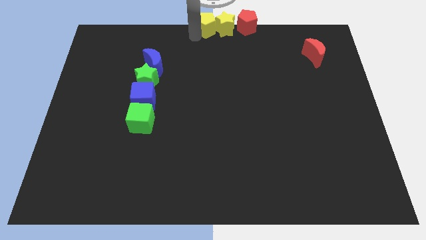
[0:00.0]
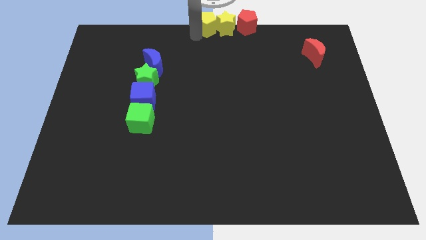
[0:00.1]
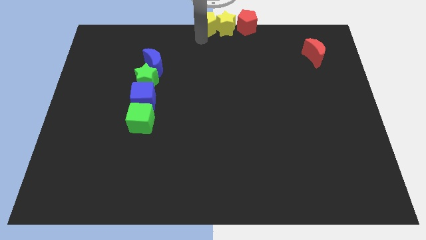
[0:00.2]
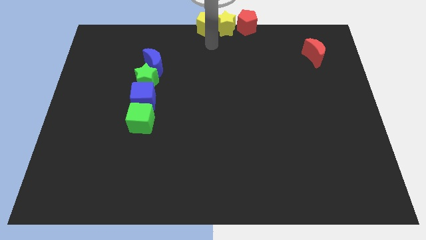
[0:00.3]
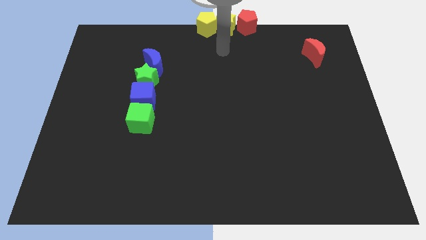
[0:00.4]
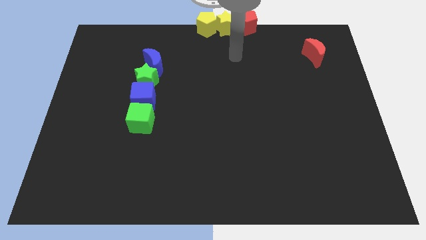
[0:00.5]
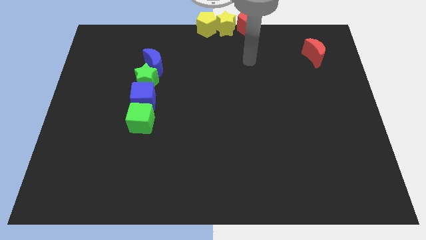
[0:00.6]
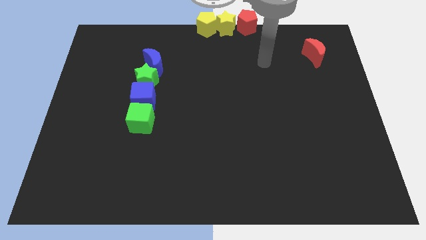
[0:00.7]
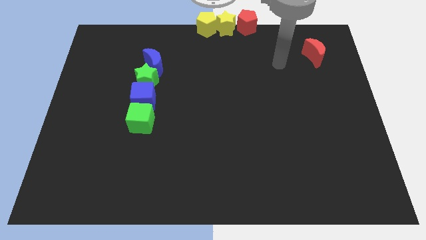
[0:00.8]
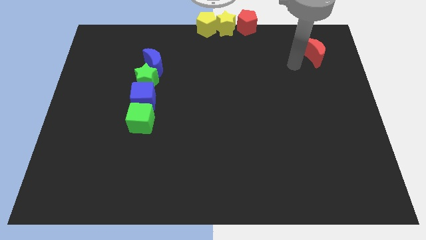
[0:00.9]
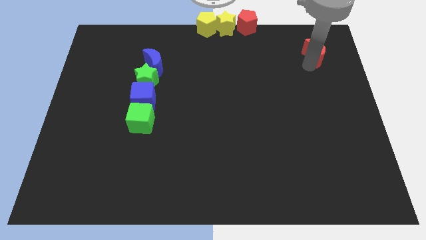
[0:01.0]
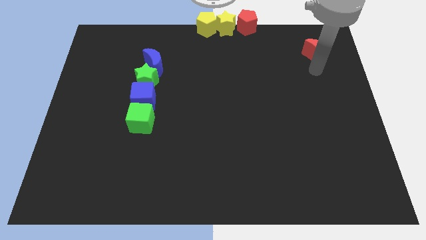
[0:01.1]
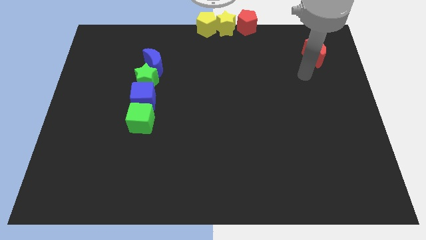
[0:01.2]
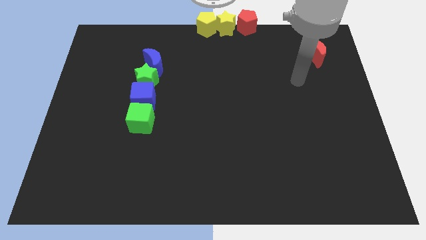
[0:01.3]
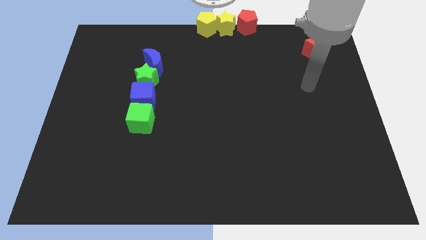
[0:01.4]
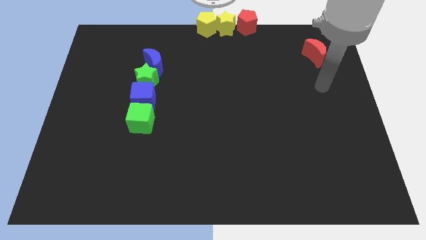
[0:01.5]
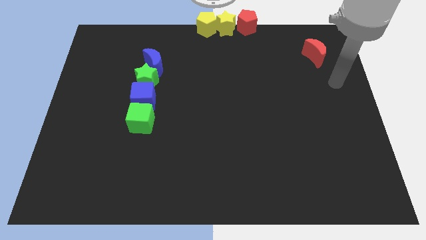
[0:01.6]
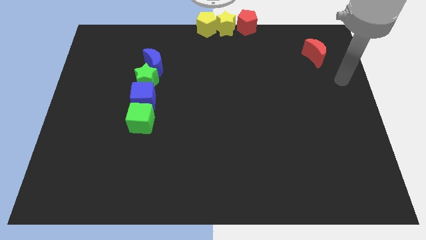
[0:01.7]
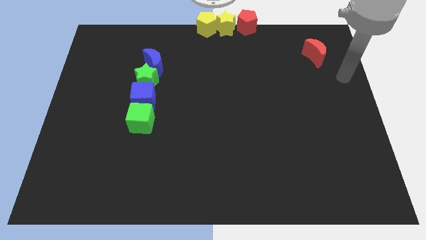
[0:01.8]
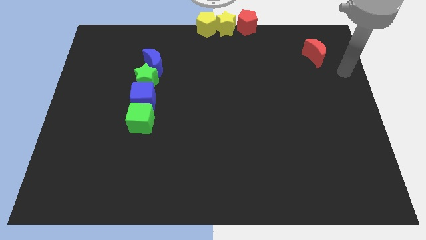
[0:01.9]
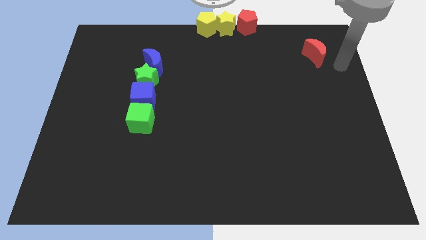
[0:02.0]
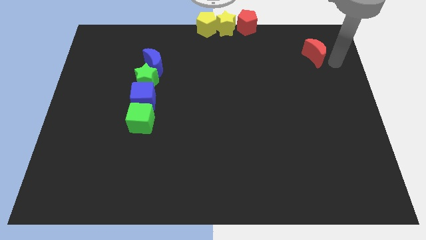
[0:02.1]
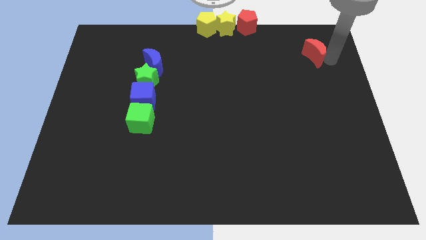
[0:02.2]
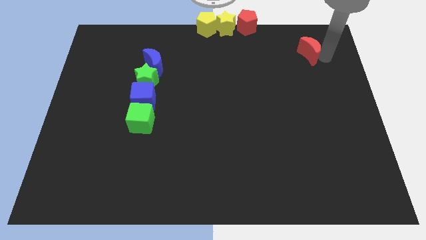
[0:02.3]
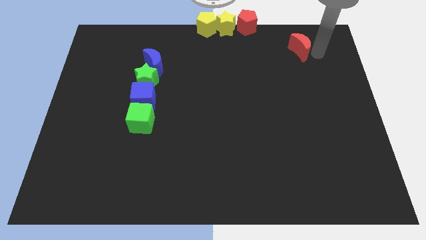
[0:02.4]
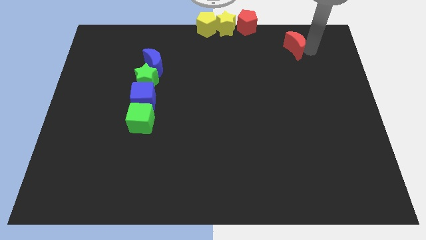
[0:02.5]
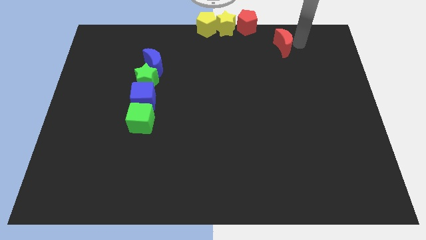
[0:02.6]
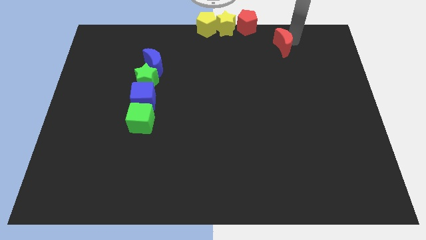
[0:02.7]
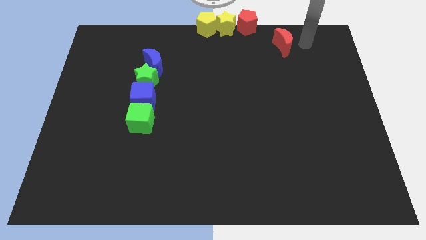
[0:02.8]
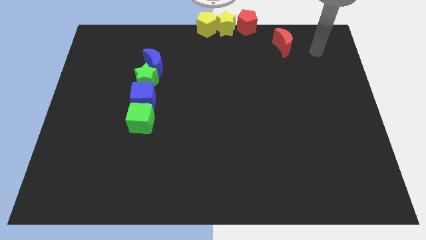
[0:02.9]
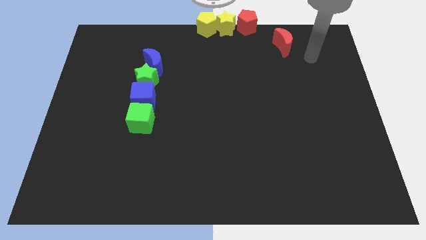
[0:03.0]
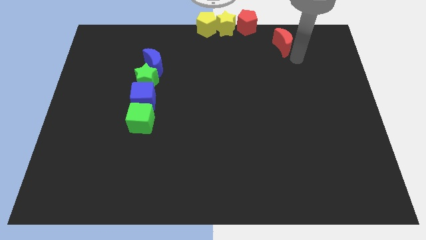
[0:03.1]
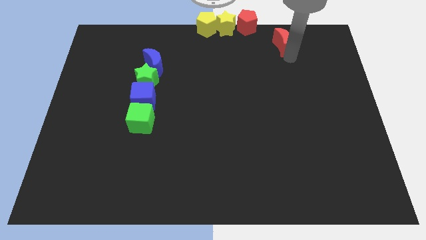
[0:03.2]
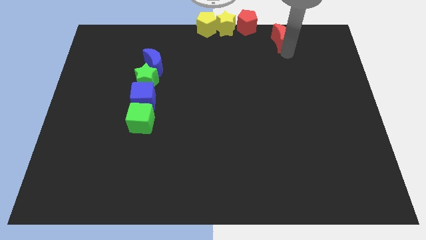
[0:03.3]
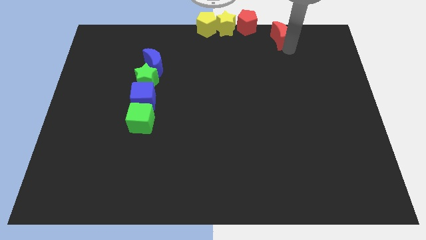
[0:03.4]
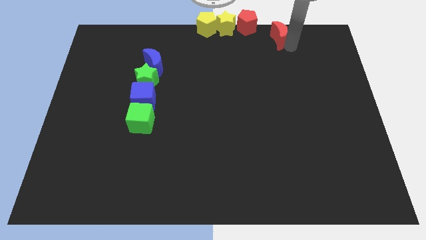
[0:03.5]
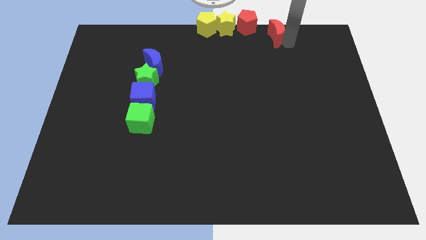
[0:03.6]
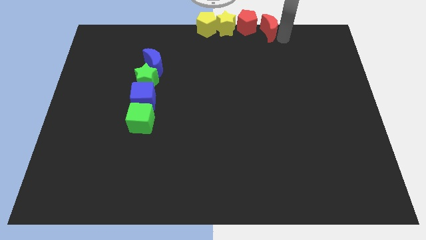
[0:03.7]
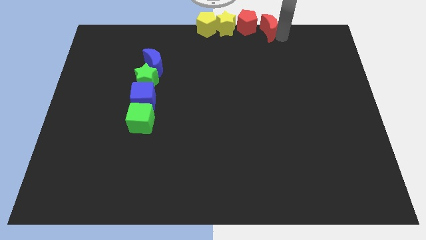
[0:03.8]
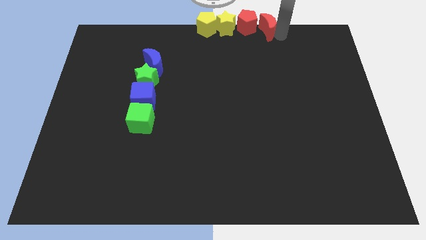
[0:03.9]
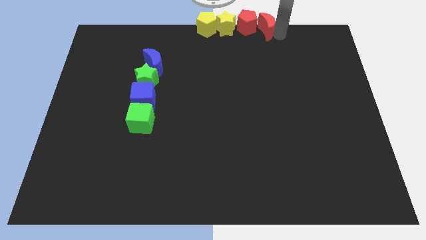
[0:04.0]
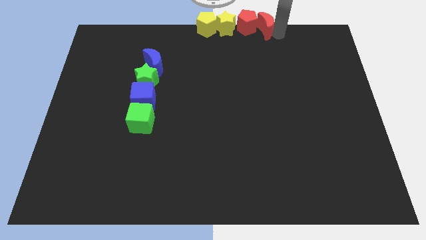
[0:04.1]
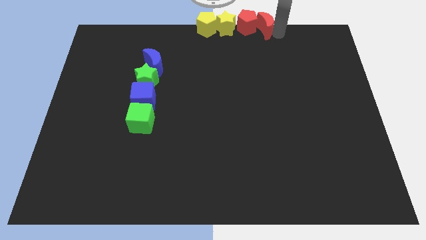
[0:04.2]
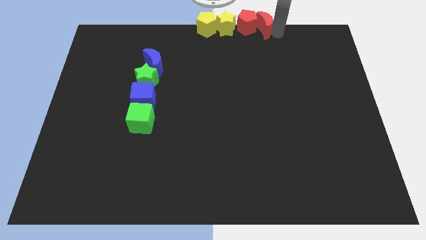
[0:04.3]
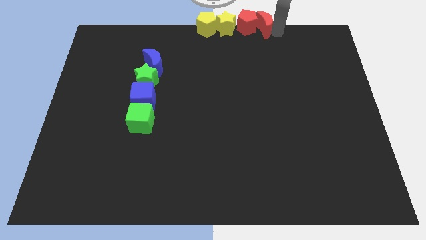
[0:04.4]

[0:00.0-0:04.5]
push the red crescent into the right side of the red pentagon

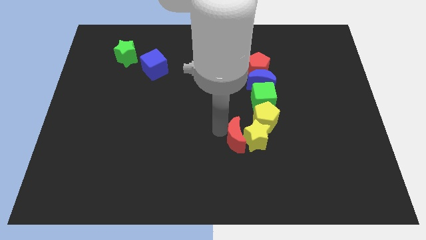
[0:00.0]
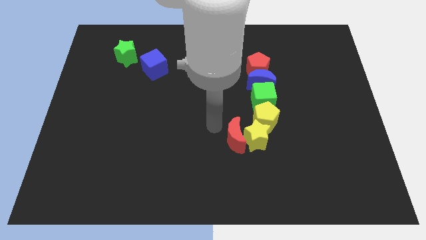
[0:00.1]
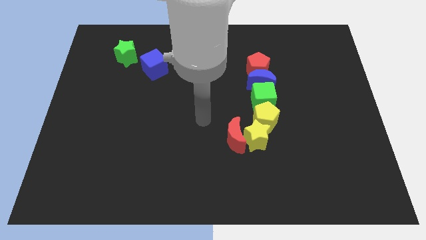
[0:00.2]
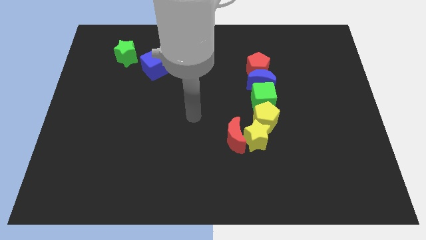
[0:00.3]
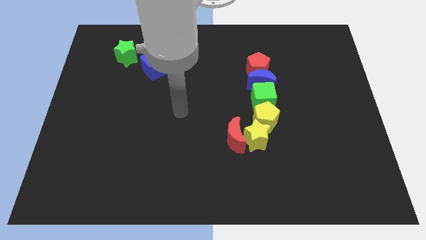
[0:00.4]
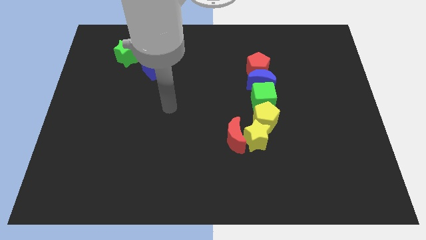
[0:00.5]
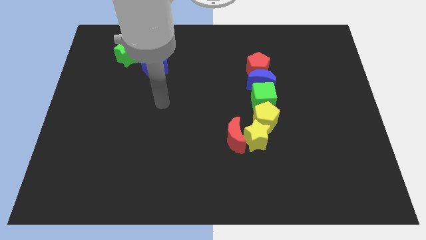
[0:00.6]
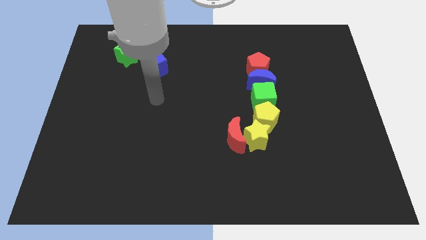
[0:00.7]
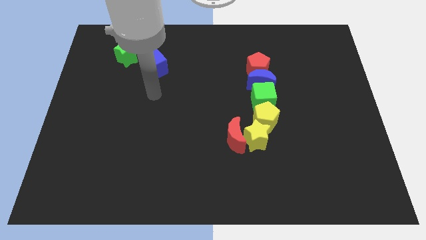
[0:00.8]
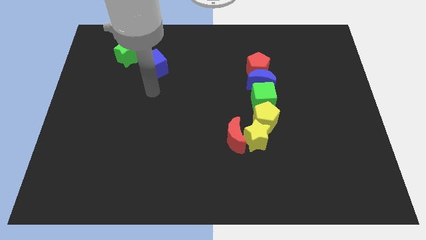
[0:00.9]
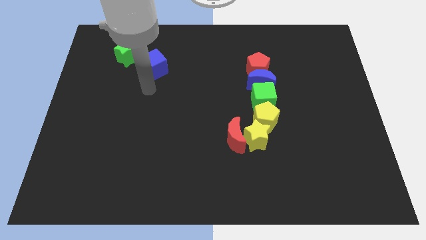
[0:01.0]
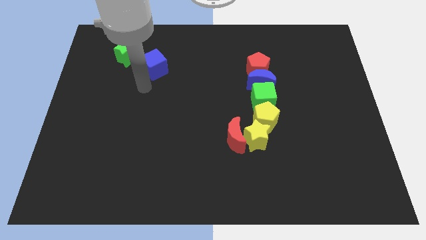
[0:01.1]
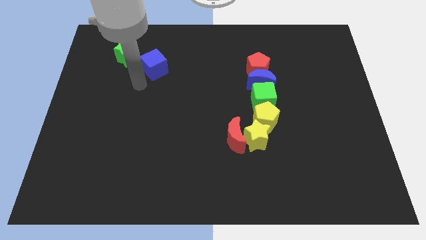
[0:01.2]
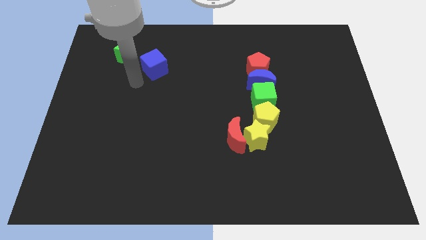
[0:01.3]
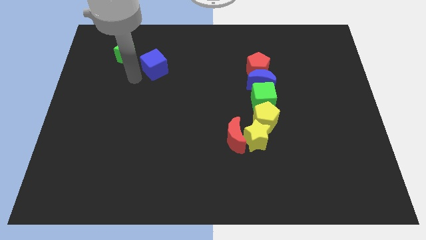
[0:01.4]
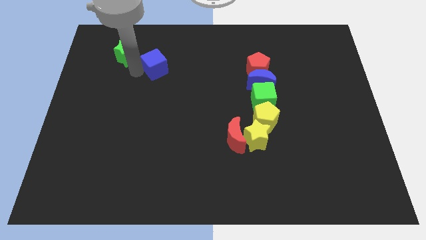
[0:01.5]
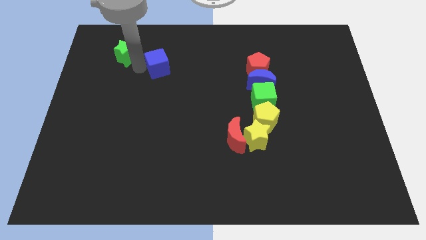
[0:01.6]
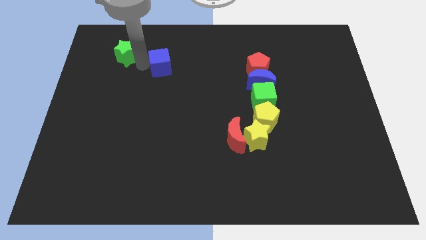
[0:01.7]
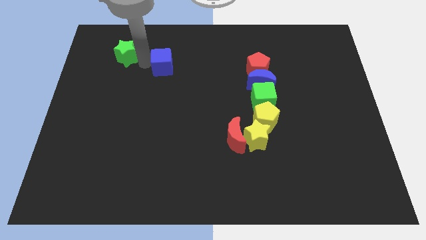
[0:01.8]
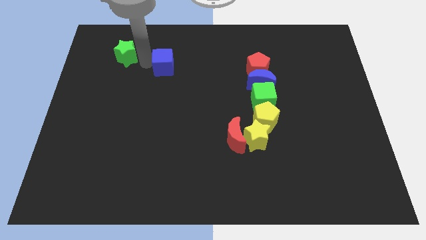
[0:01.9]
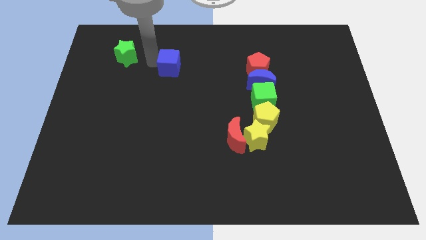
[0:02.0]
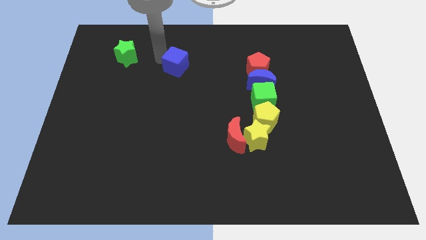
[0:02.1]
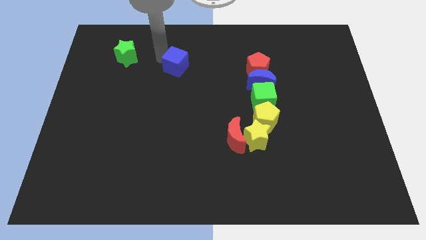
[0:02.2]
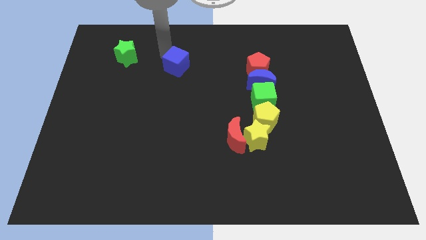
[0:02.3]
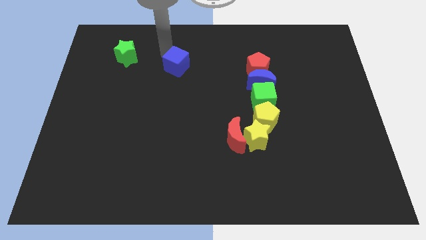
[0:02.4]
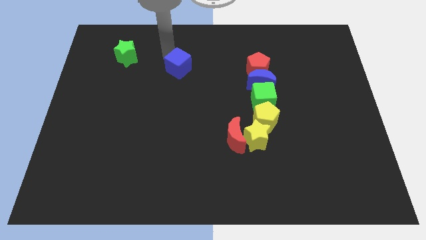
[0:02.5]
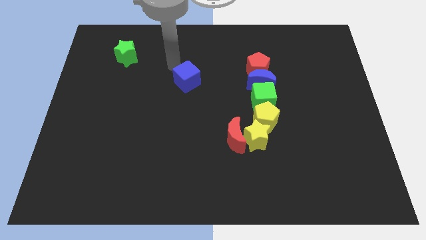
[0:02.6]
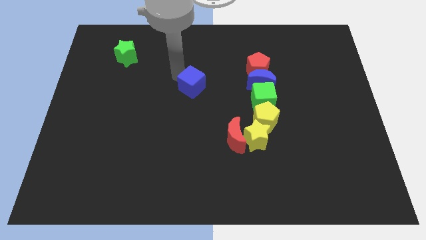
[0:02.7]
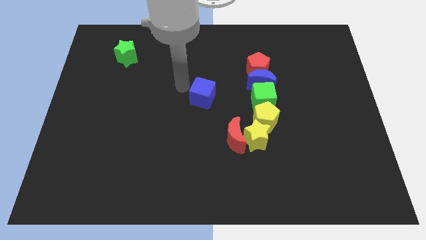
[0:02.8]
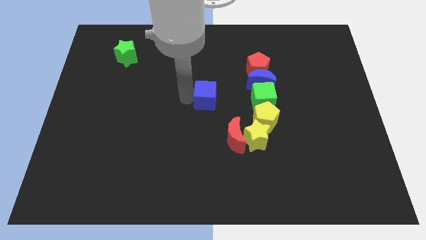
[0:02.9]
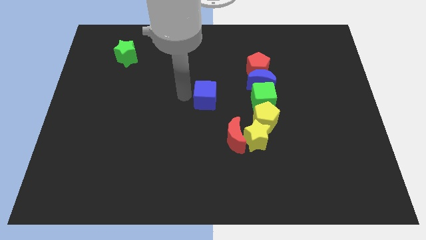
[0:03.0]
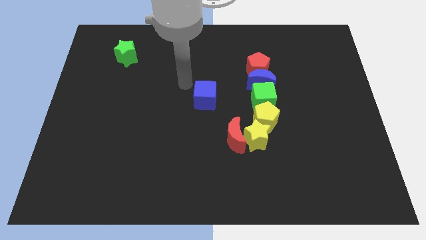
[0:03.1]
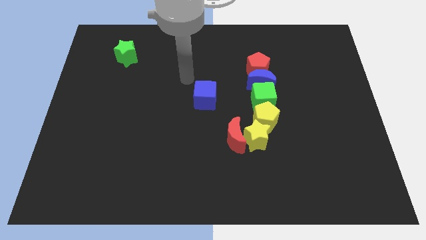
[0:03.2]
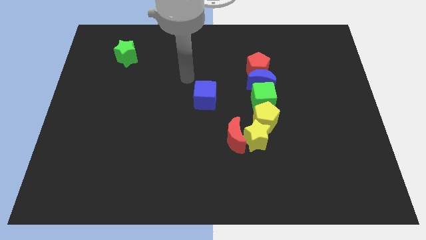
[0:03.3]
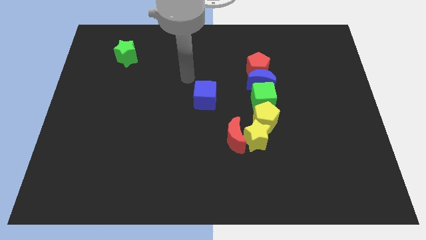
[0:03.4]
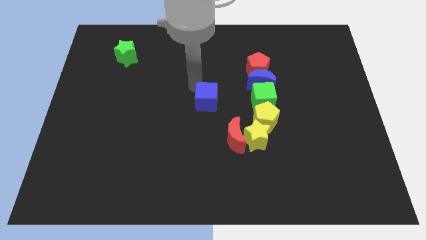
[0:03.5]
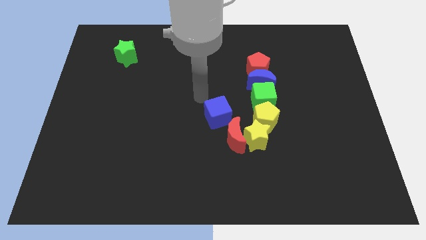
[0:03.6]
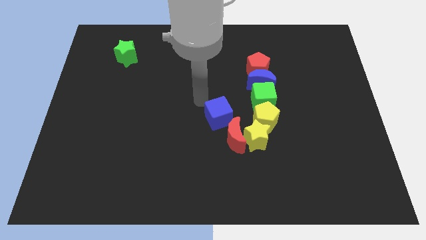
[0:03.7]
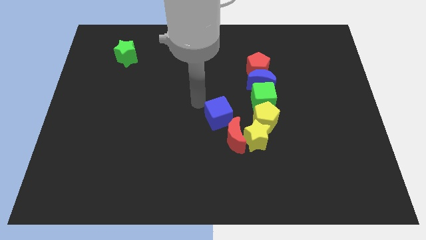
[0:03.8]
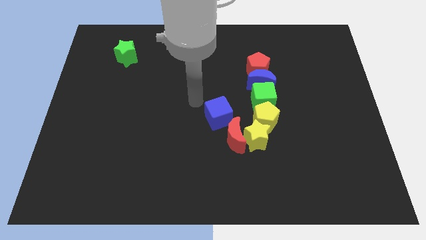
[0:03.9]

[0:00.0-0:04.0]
move the blue cube towards the top side of the red moon

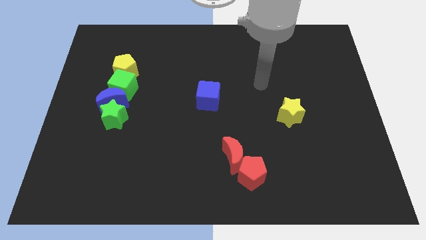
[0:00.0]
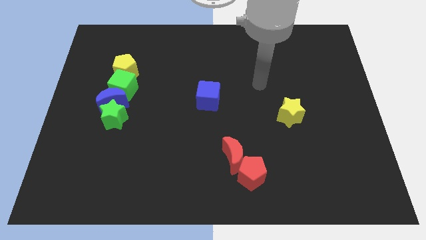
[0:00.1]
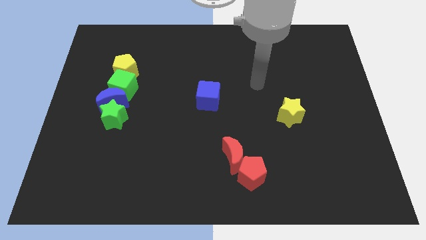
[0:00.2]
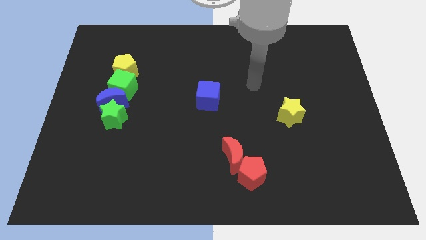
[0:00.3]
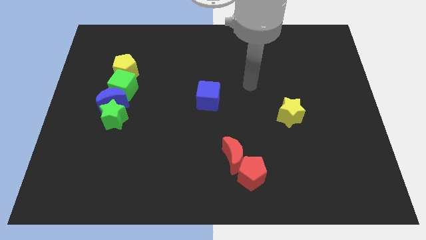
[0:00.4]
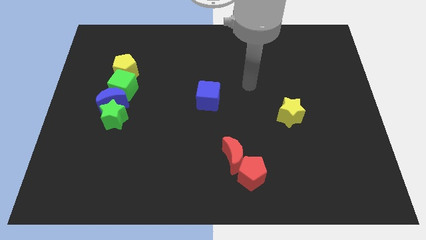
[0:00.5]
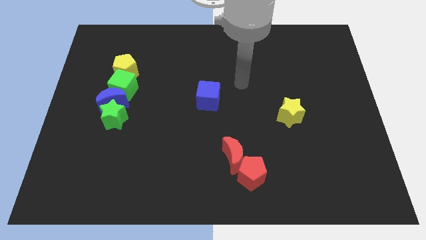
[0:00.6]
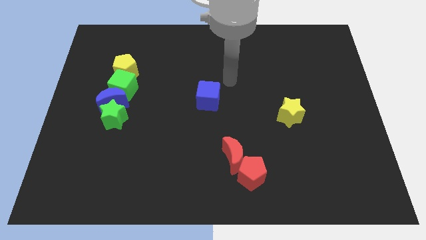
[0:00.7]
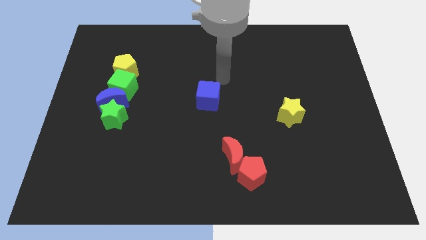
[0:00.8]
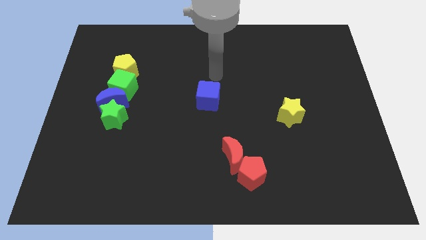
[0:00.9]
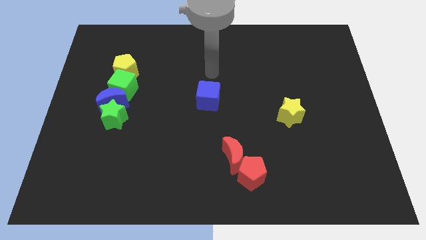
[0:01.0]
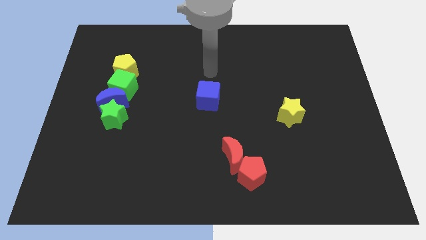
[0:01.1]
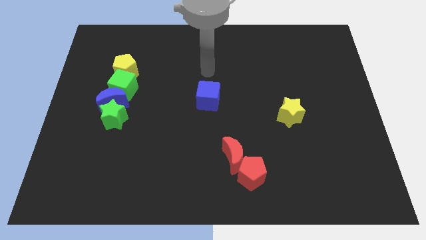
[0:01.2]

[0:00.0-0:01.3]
place your arm above the blue cube
